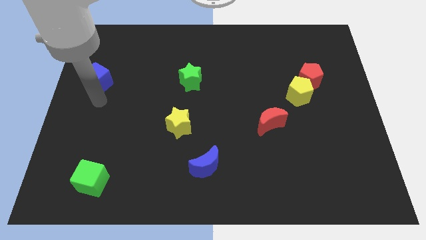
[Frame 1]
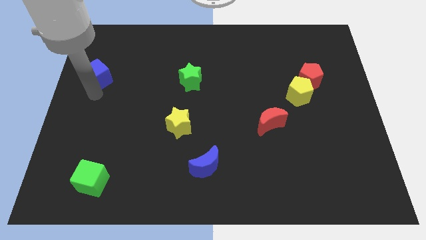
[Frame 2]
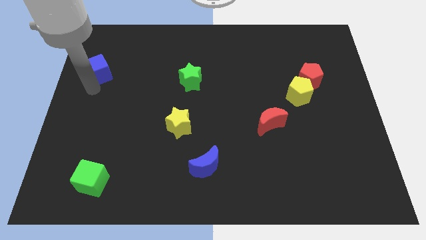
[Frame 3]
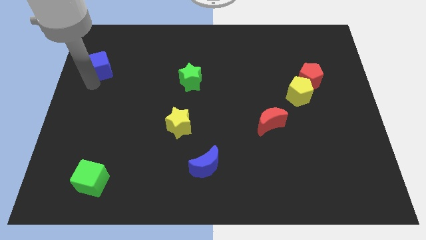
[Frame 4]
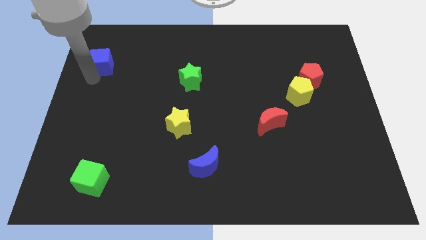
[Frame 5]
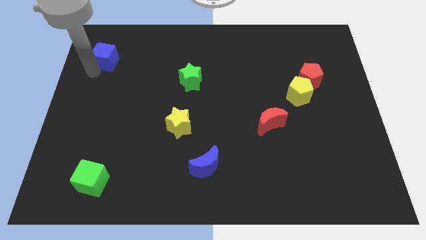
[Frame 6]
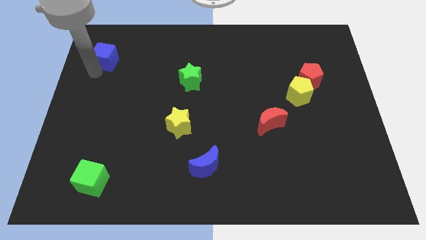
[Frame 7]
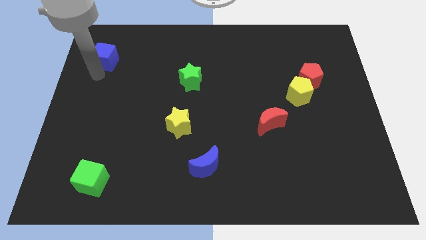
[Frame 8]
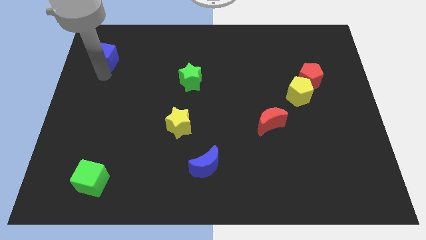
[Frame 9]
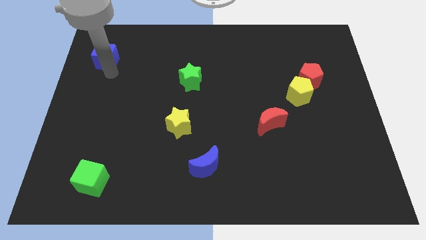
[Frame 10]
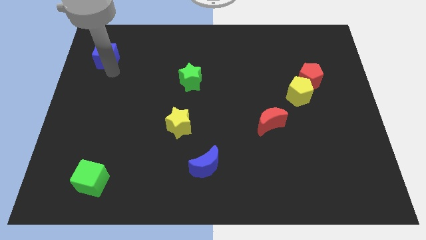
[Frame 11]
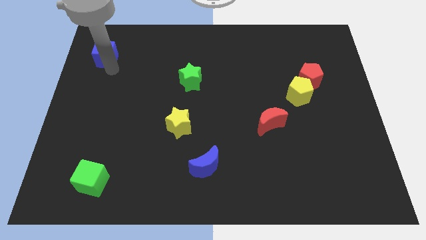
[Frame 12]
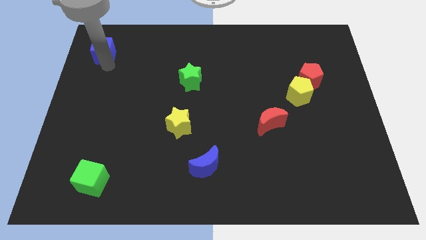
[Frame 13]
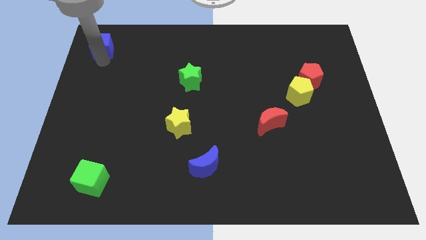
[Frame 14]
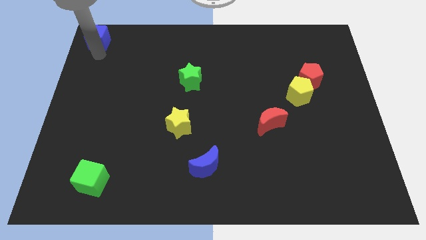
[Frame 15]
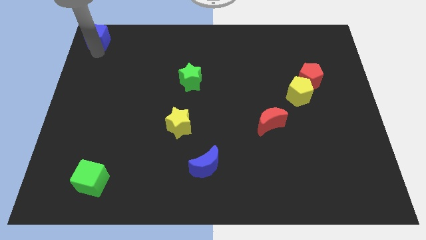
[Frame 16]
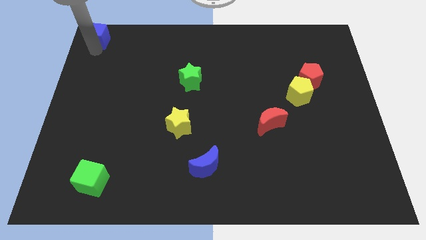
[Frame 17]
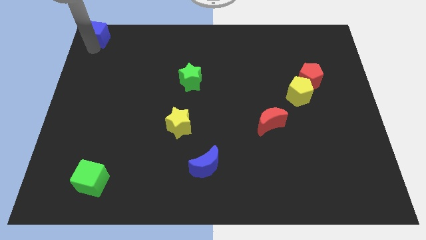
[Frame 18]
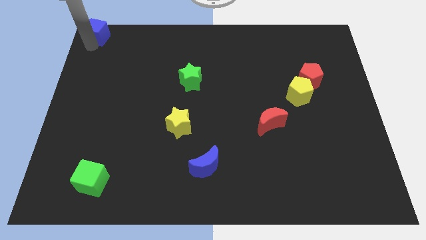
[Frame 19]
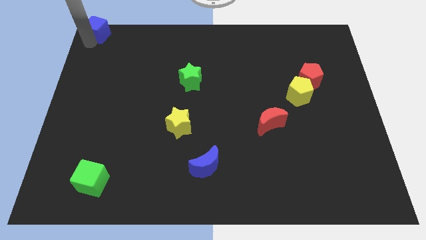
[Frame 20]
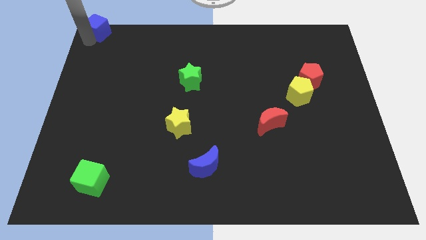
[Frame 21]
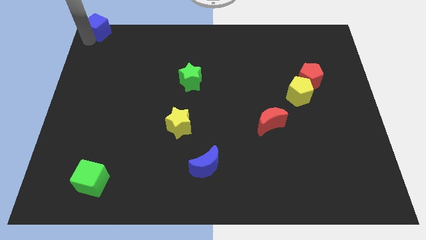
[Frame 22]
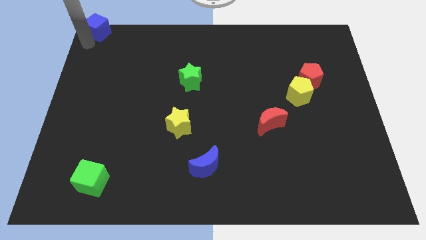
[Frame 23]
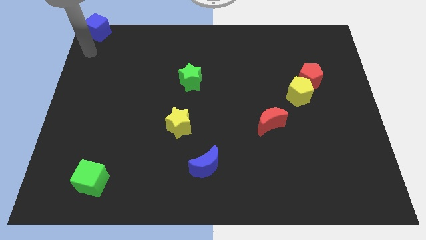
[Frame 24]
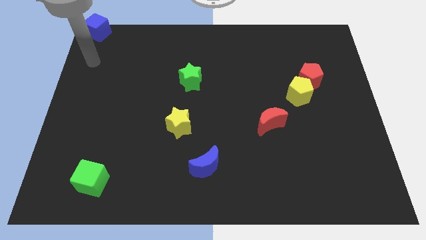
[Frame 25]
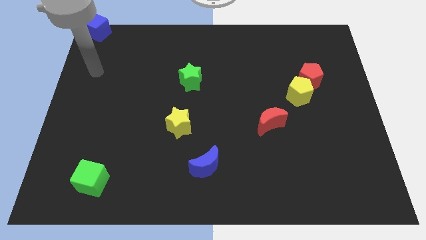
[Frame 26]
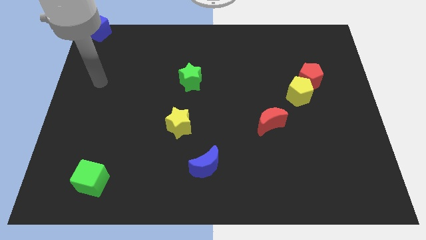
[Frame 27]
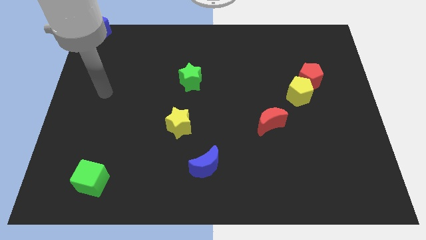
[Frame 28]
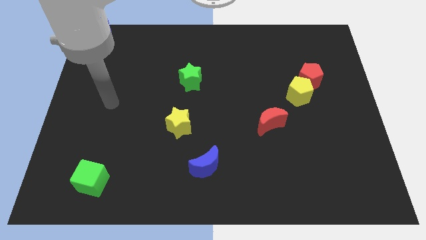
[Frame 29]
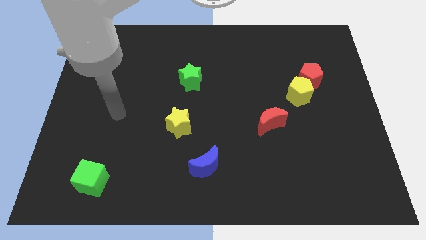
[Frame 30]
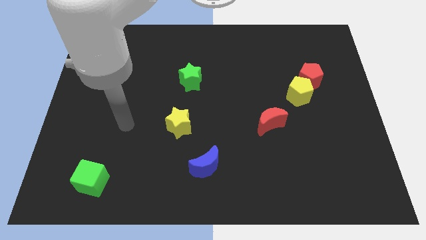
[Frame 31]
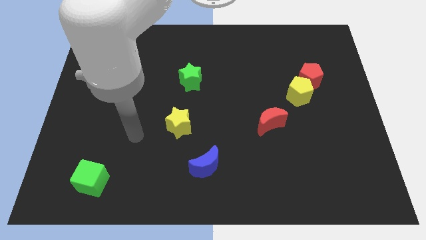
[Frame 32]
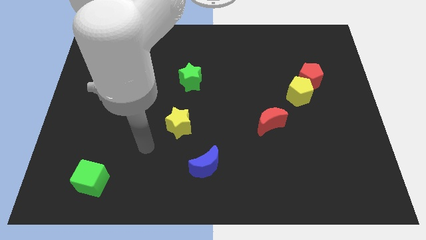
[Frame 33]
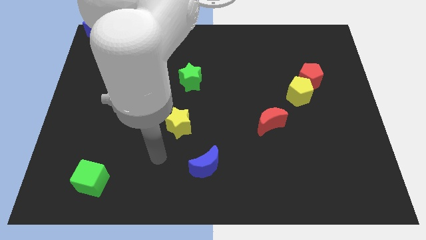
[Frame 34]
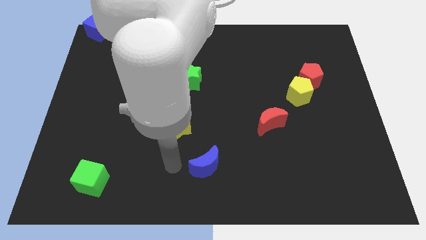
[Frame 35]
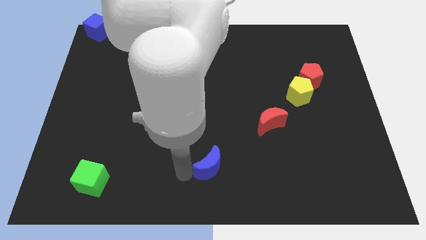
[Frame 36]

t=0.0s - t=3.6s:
place the blue cube at the top left corner of the board

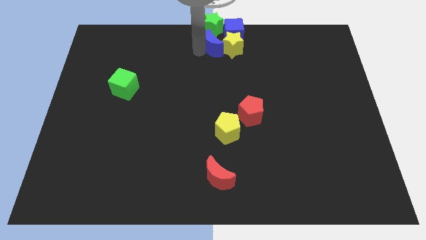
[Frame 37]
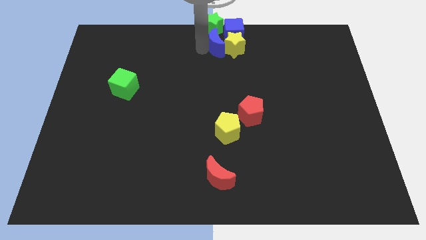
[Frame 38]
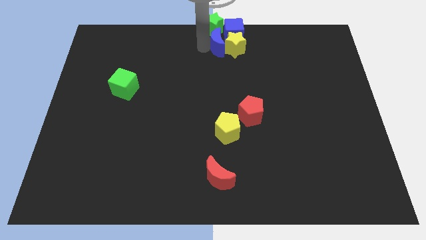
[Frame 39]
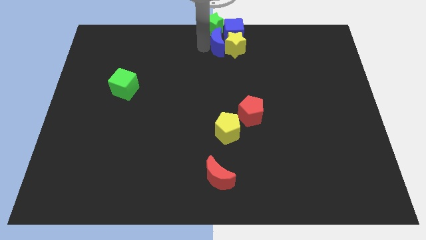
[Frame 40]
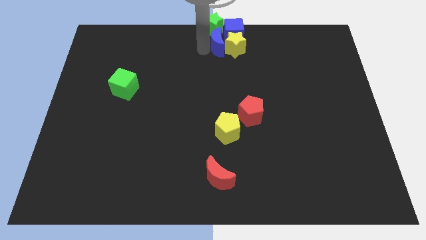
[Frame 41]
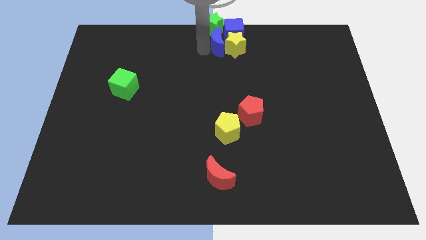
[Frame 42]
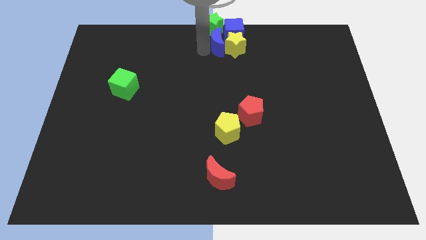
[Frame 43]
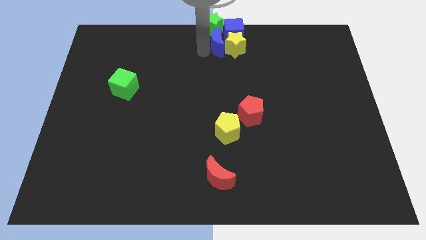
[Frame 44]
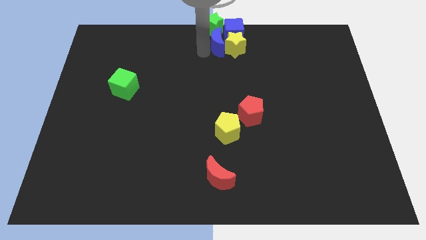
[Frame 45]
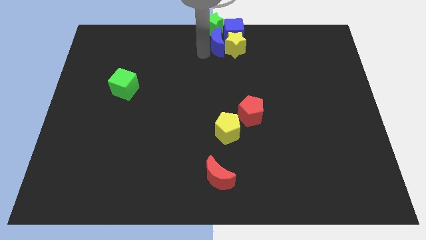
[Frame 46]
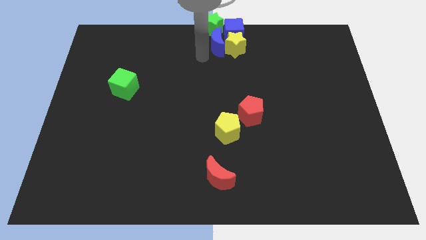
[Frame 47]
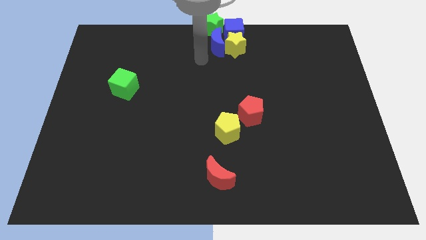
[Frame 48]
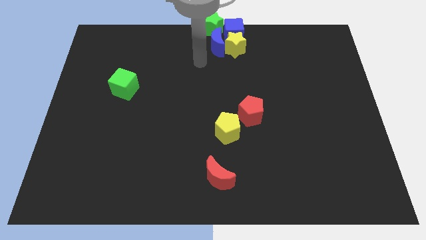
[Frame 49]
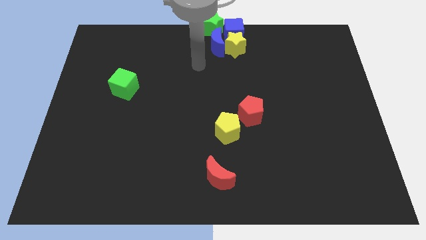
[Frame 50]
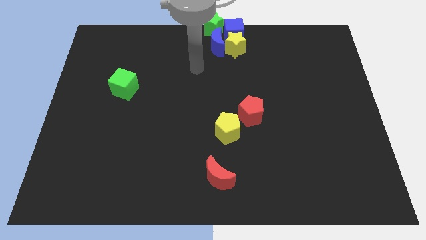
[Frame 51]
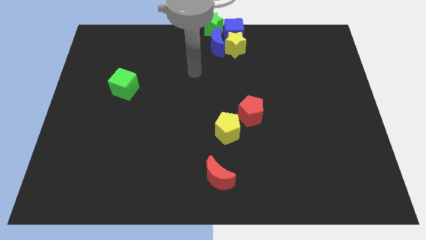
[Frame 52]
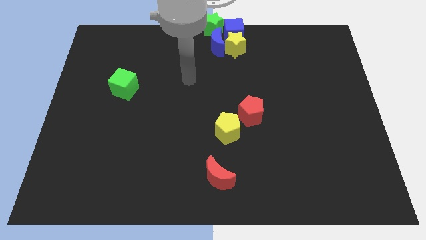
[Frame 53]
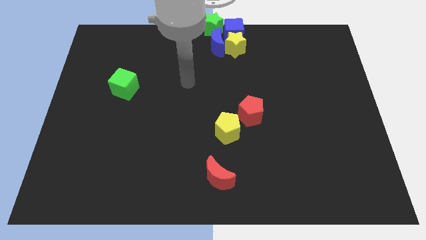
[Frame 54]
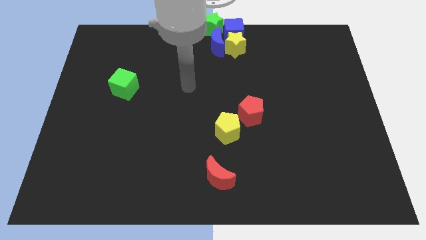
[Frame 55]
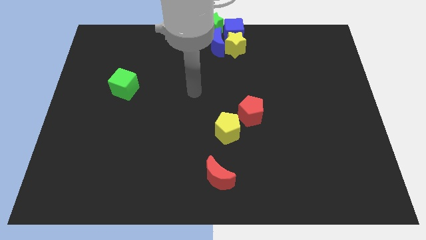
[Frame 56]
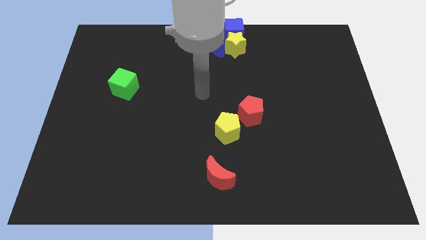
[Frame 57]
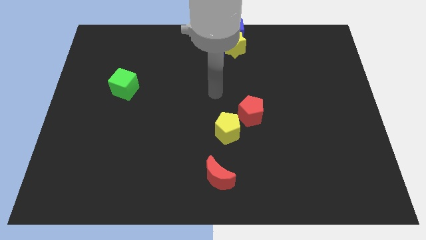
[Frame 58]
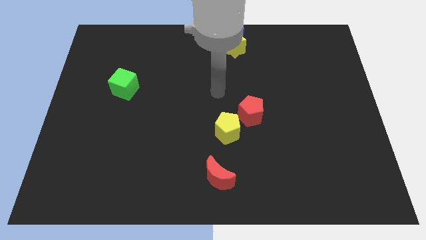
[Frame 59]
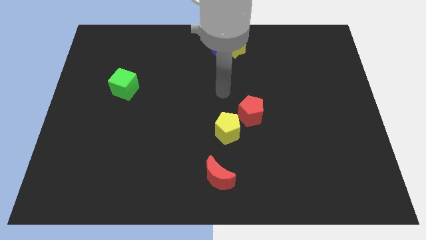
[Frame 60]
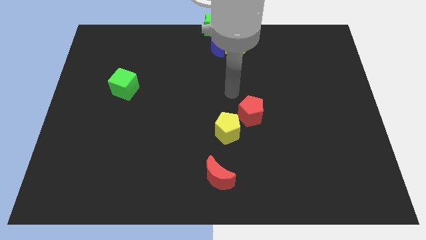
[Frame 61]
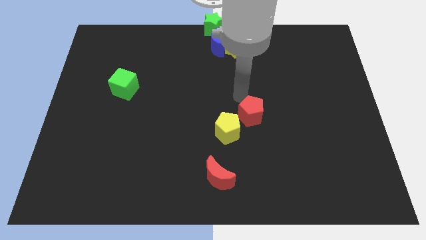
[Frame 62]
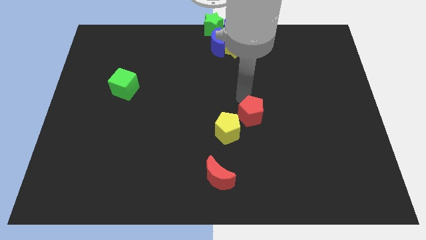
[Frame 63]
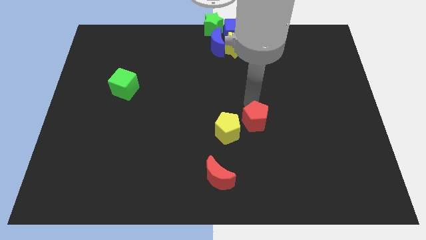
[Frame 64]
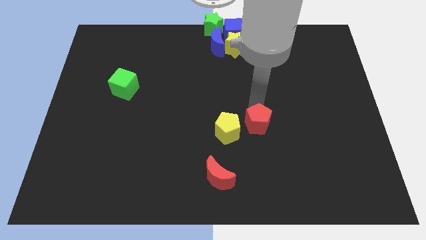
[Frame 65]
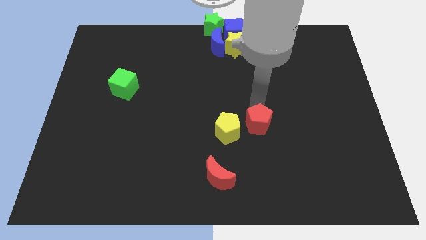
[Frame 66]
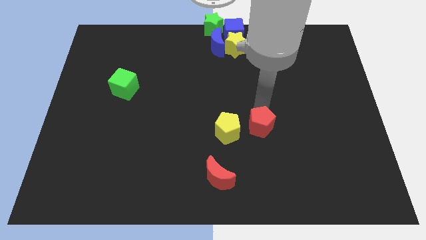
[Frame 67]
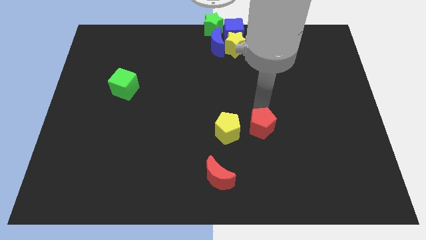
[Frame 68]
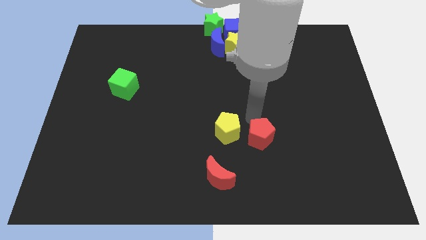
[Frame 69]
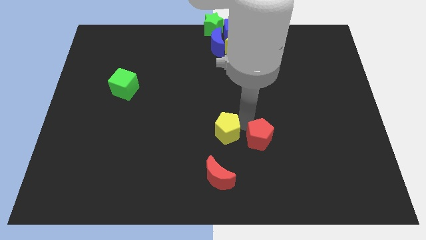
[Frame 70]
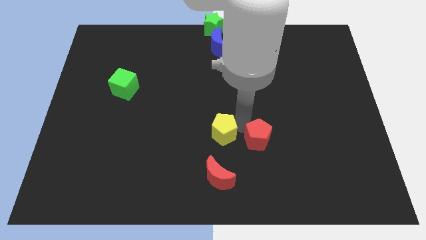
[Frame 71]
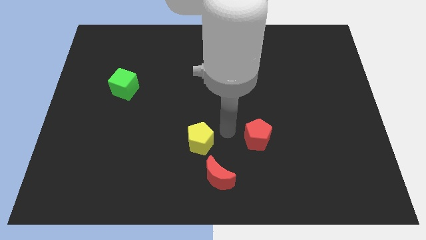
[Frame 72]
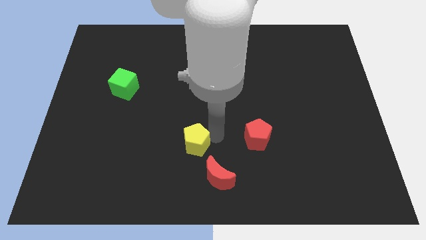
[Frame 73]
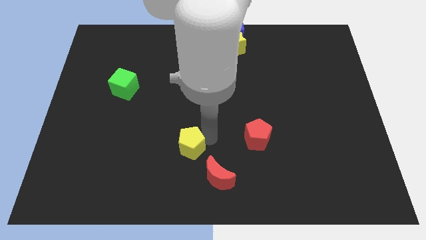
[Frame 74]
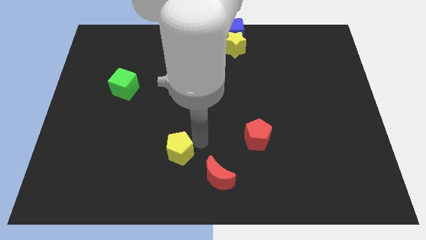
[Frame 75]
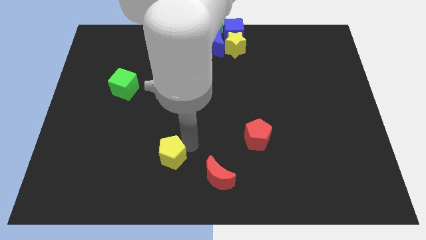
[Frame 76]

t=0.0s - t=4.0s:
separate the yellow pentagon from the red pentagon

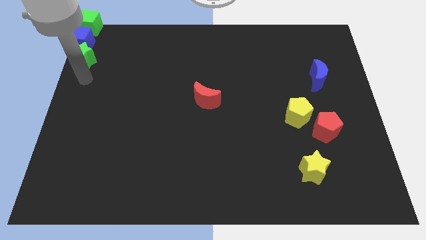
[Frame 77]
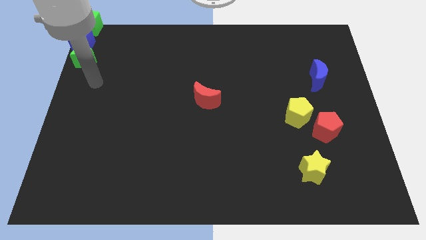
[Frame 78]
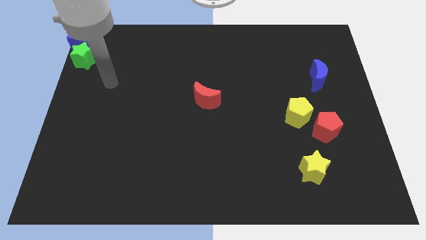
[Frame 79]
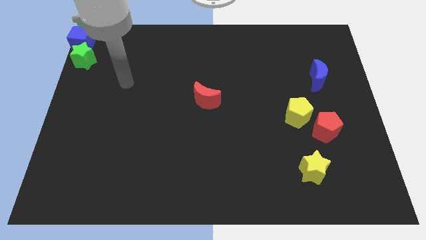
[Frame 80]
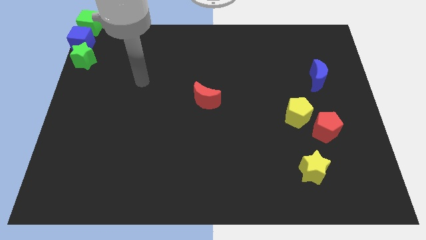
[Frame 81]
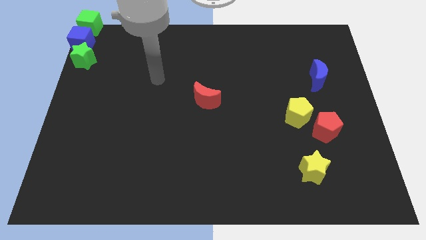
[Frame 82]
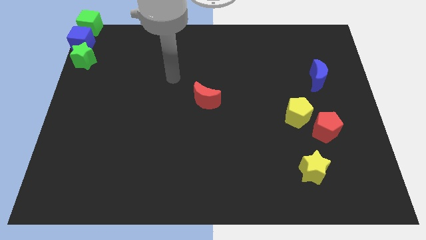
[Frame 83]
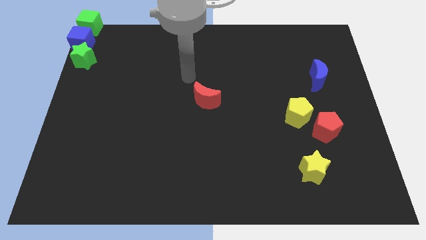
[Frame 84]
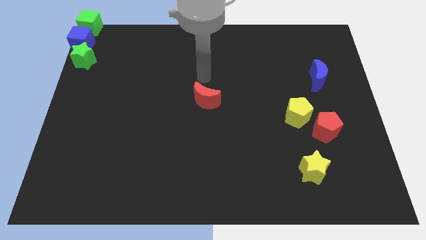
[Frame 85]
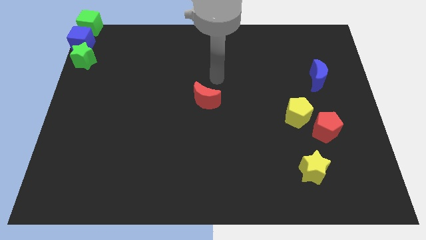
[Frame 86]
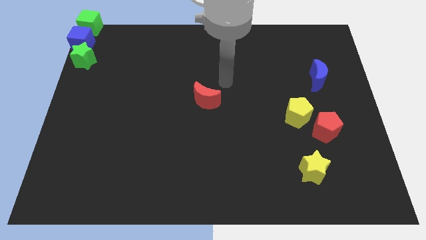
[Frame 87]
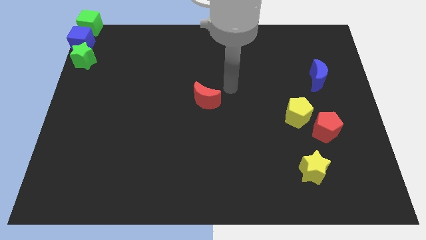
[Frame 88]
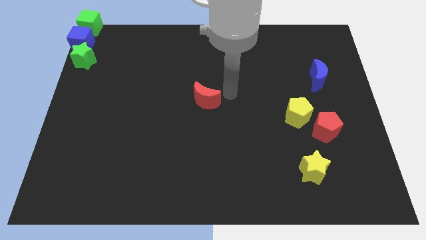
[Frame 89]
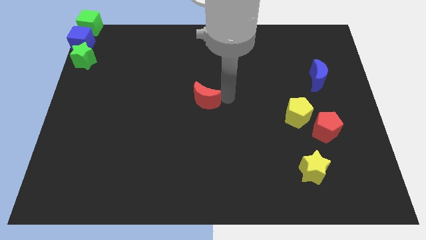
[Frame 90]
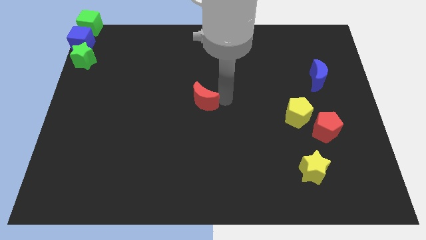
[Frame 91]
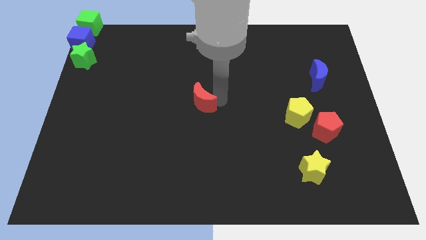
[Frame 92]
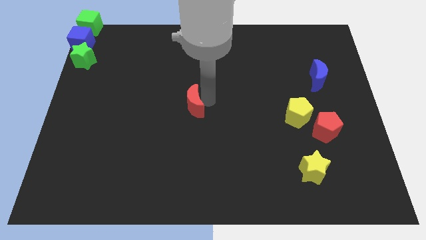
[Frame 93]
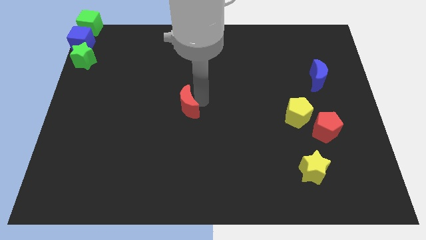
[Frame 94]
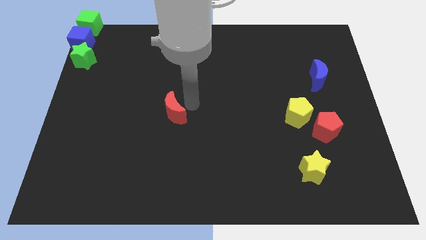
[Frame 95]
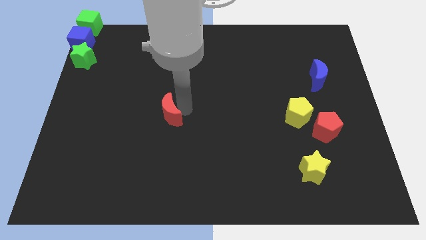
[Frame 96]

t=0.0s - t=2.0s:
slightly push the red moon to the left side
